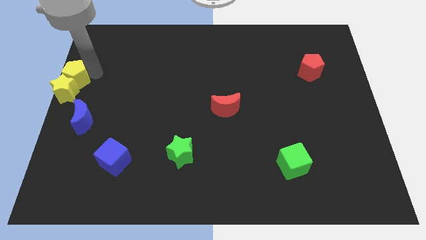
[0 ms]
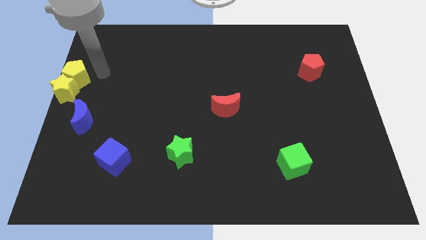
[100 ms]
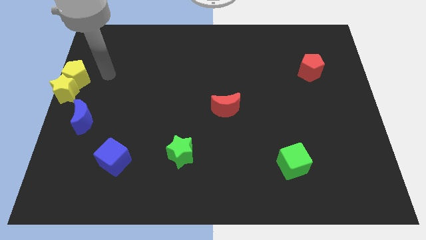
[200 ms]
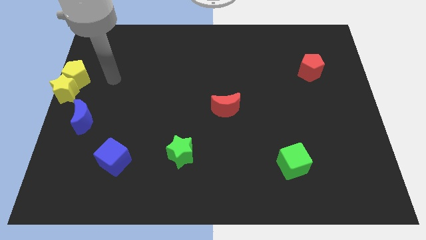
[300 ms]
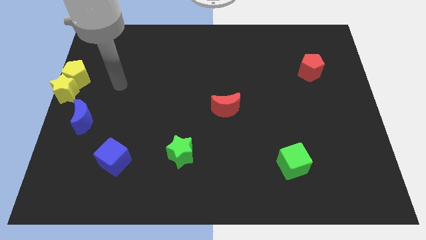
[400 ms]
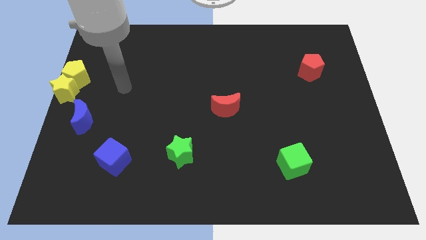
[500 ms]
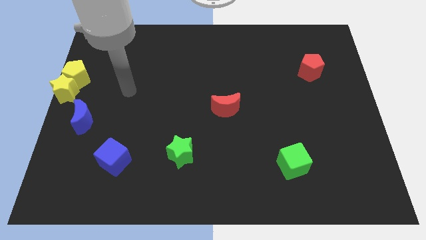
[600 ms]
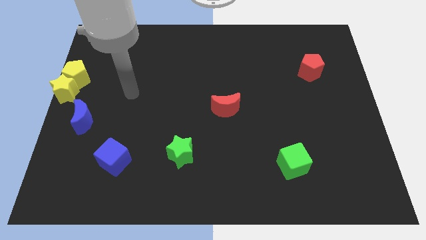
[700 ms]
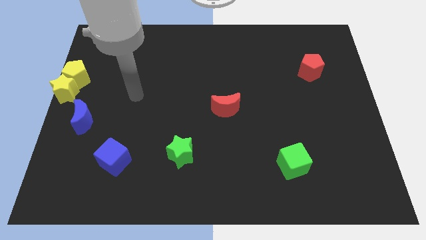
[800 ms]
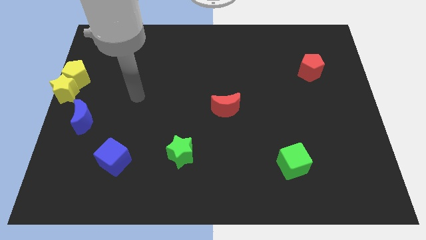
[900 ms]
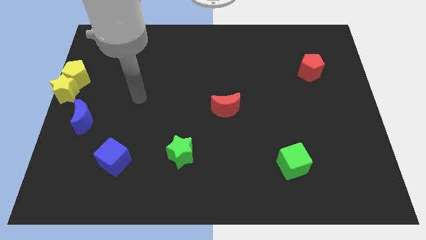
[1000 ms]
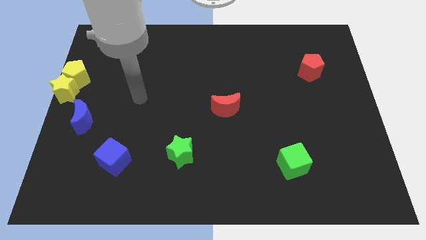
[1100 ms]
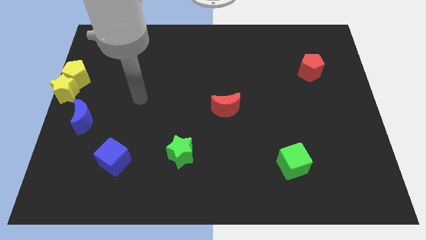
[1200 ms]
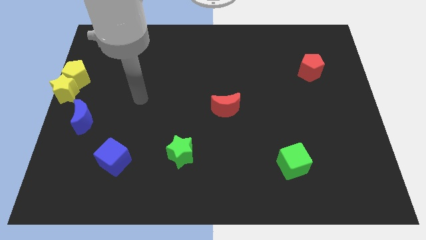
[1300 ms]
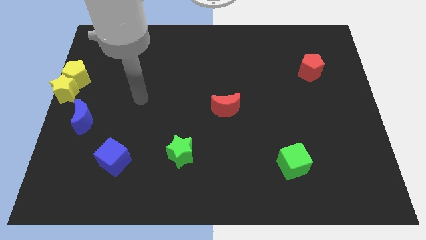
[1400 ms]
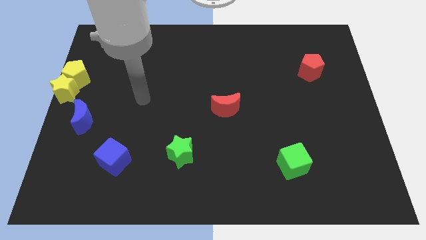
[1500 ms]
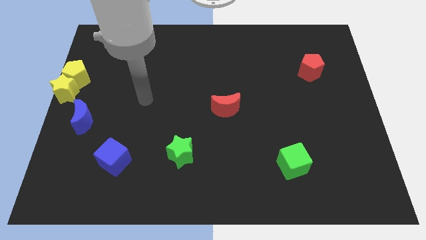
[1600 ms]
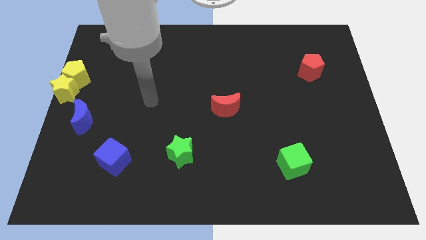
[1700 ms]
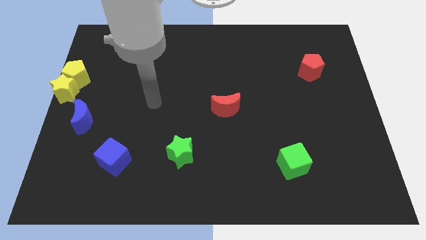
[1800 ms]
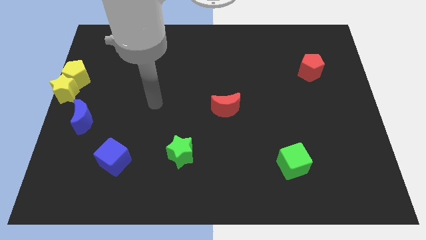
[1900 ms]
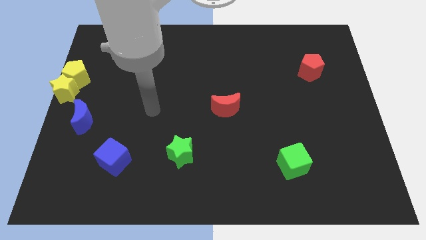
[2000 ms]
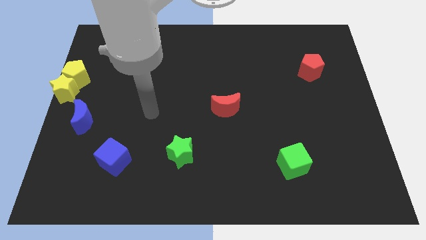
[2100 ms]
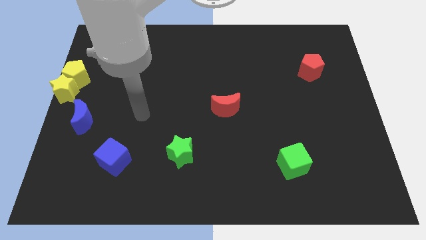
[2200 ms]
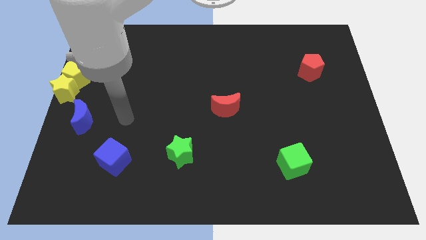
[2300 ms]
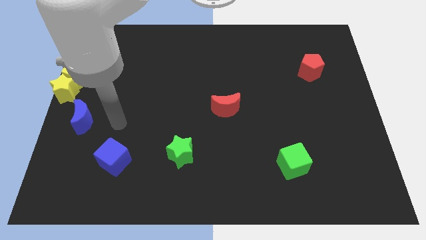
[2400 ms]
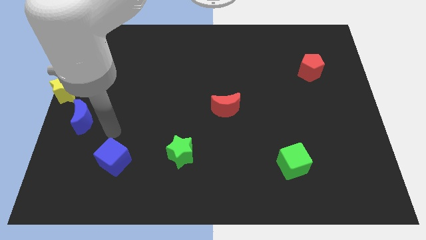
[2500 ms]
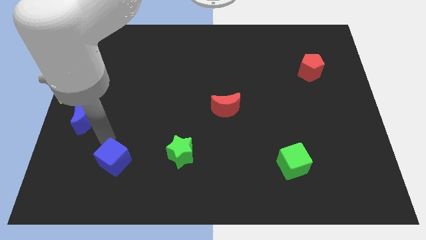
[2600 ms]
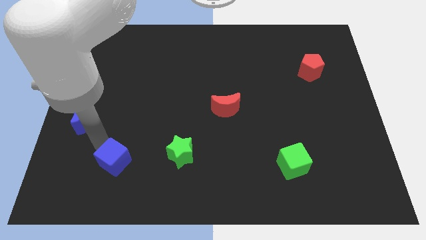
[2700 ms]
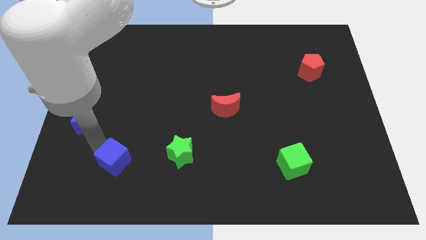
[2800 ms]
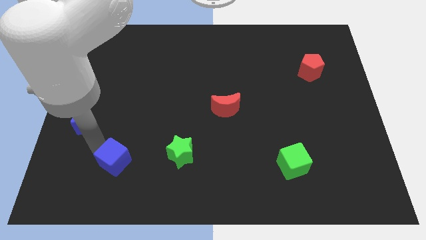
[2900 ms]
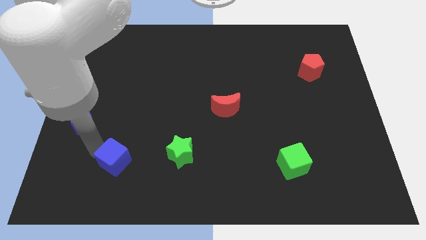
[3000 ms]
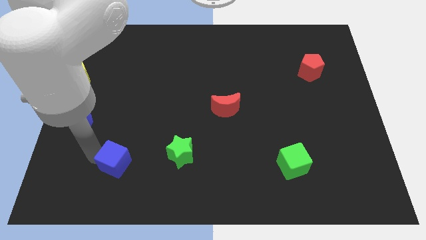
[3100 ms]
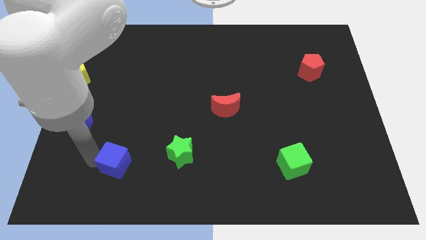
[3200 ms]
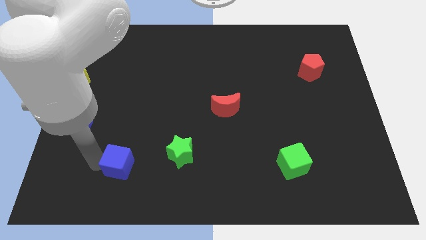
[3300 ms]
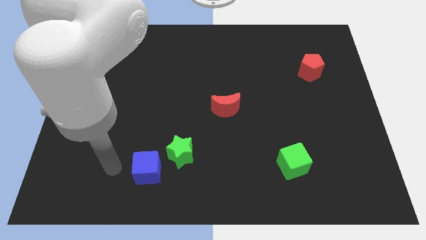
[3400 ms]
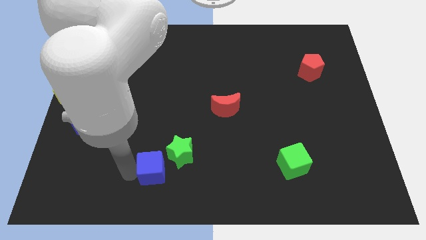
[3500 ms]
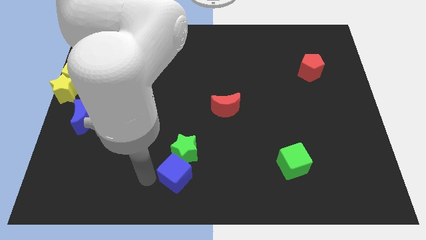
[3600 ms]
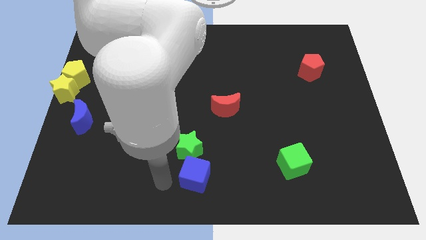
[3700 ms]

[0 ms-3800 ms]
slide the blue cube into the bottom side of the green star

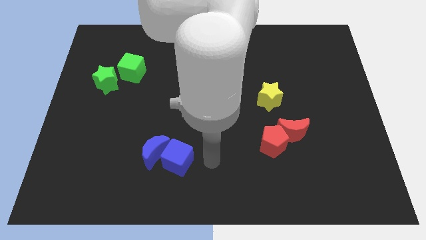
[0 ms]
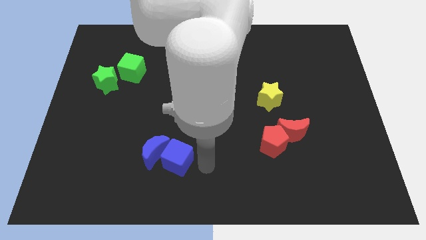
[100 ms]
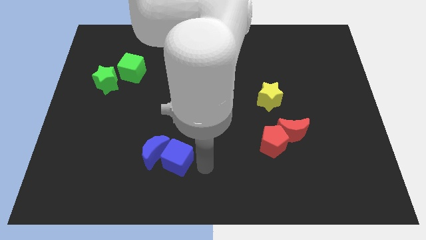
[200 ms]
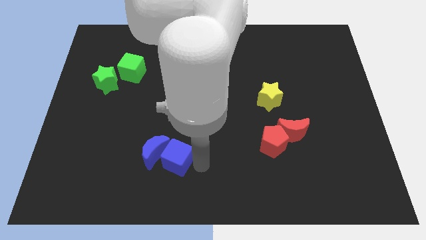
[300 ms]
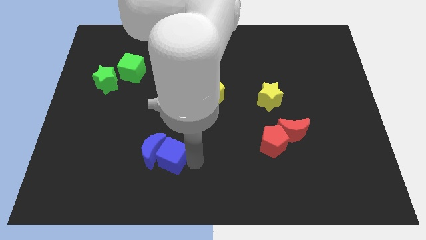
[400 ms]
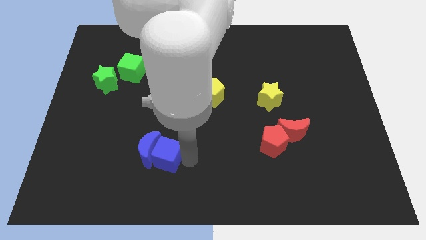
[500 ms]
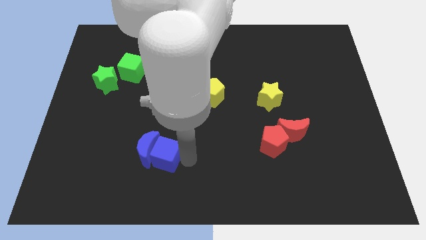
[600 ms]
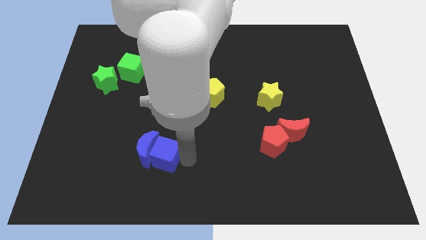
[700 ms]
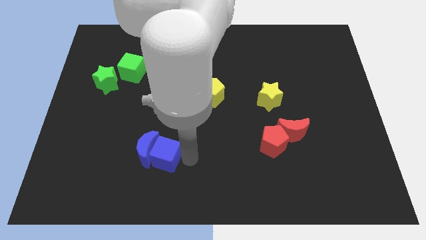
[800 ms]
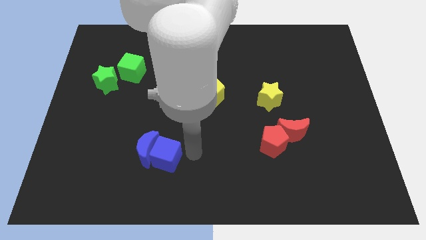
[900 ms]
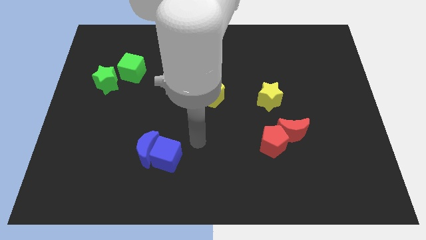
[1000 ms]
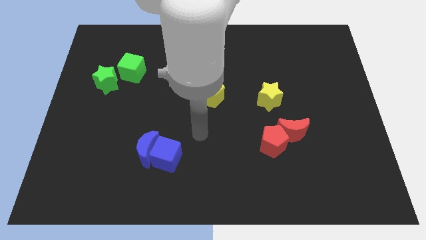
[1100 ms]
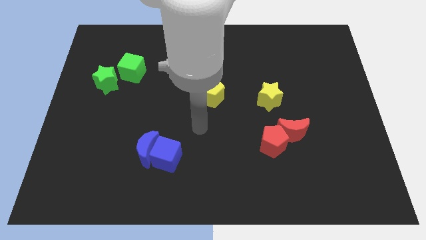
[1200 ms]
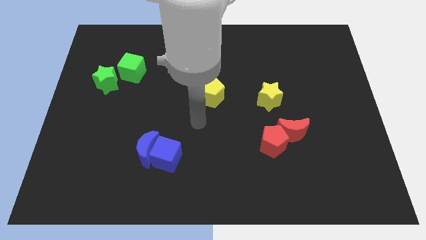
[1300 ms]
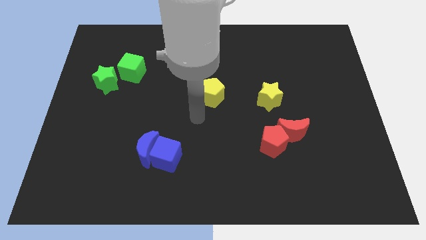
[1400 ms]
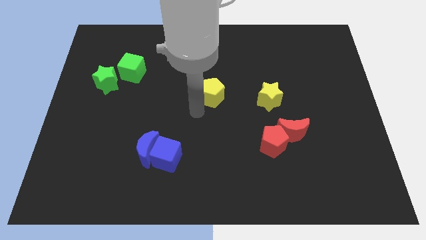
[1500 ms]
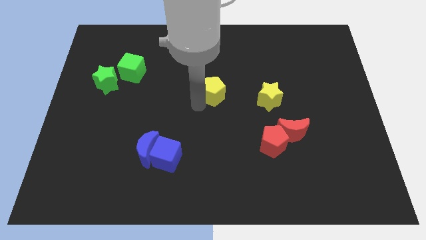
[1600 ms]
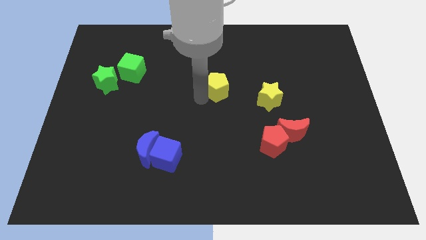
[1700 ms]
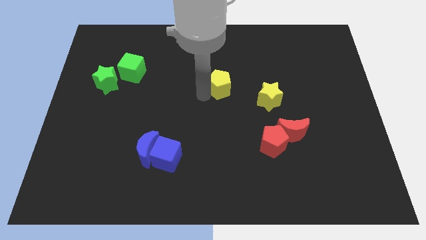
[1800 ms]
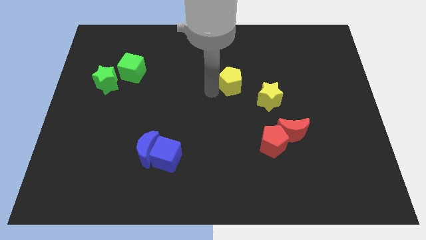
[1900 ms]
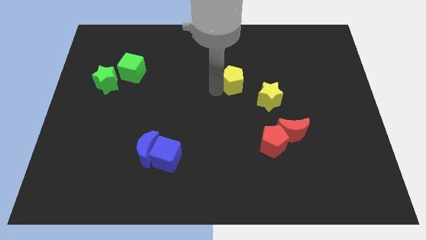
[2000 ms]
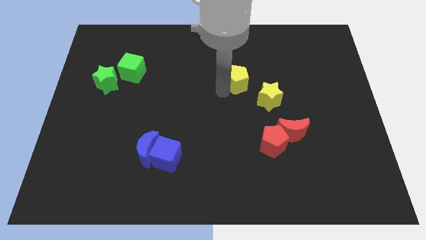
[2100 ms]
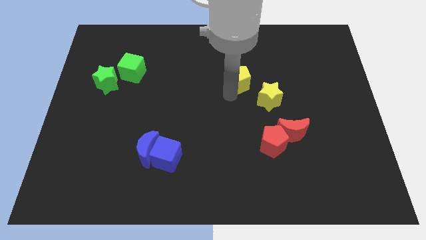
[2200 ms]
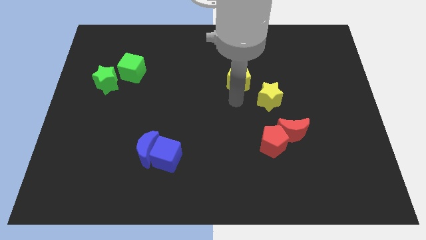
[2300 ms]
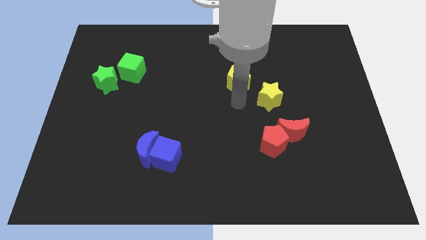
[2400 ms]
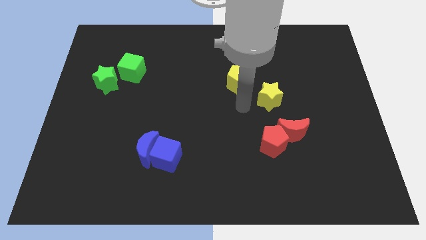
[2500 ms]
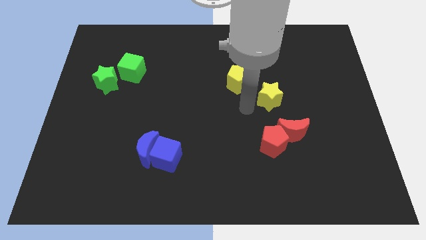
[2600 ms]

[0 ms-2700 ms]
place the yellow pentagon diagonally top left to the yellow star

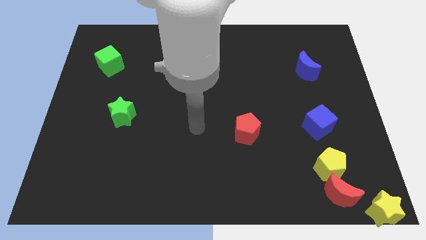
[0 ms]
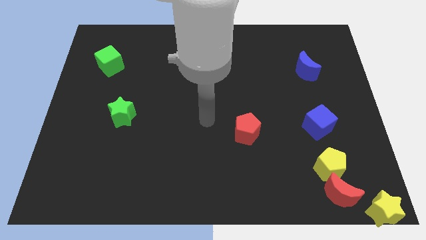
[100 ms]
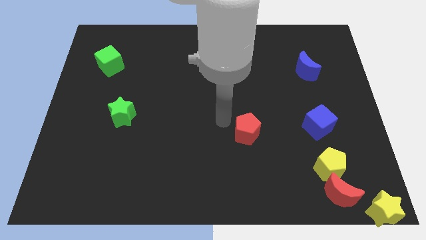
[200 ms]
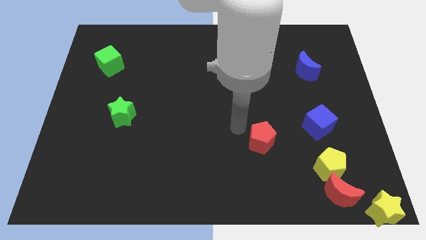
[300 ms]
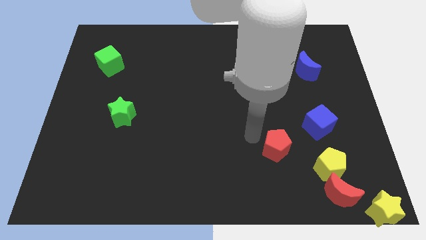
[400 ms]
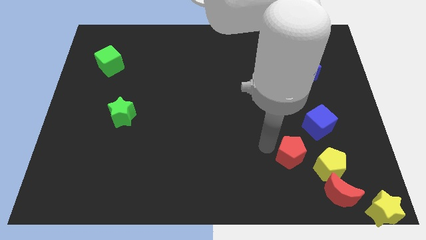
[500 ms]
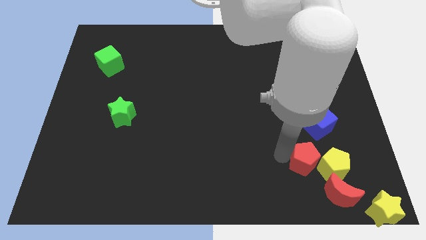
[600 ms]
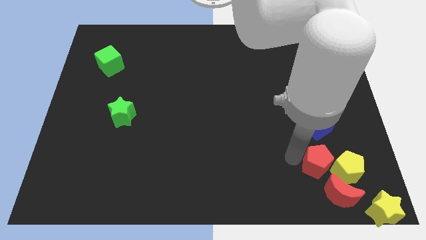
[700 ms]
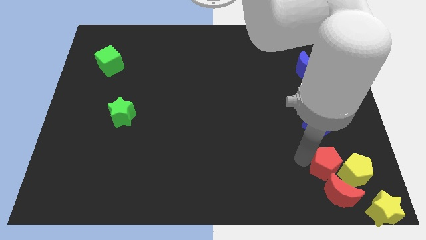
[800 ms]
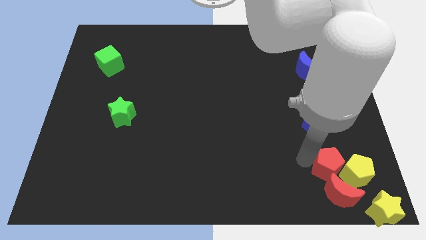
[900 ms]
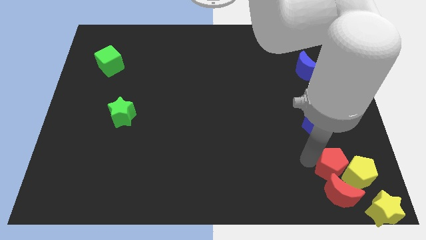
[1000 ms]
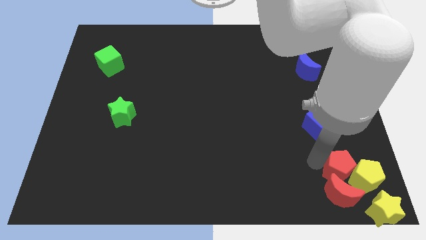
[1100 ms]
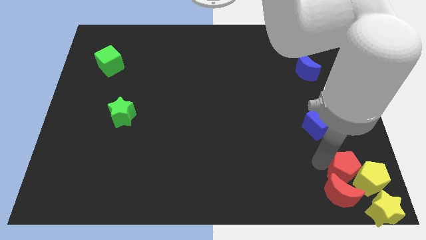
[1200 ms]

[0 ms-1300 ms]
push the red pentagon into the yellow pentagon

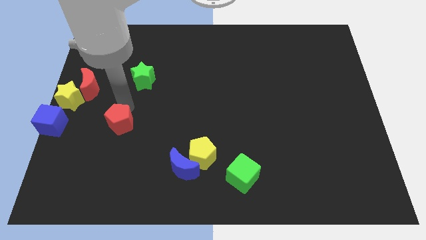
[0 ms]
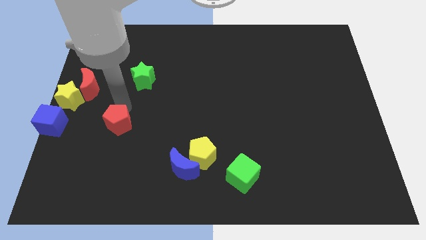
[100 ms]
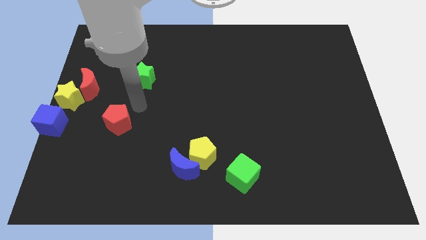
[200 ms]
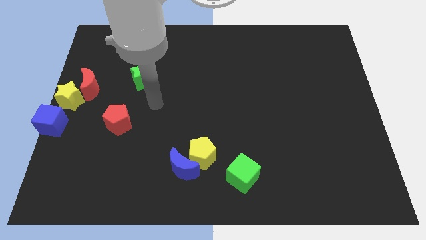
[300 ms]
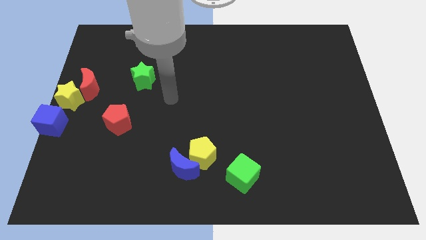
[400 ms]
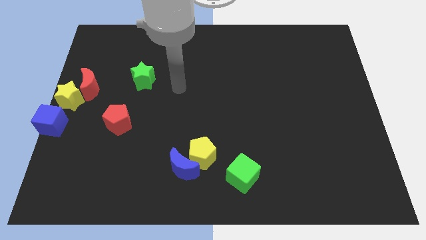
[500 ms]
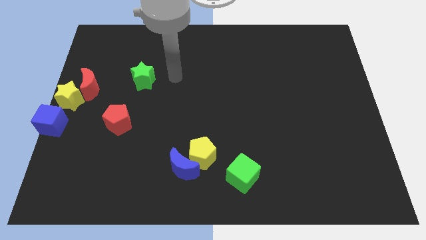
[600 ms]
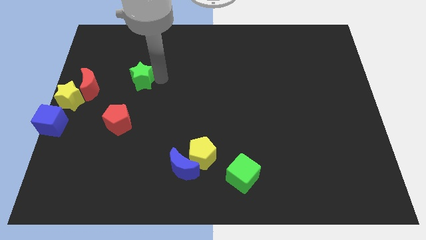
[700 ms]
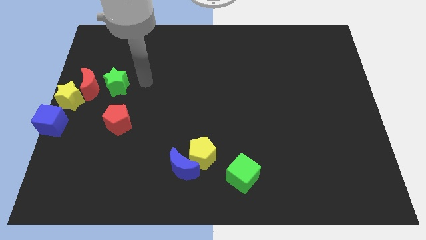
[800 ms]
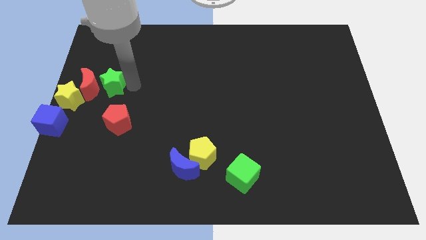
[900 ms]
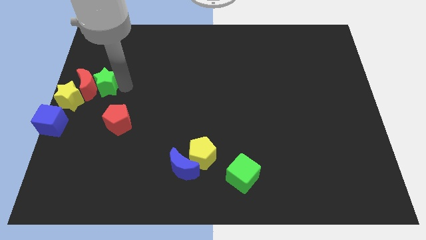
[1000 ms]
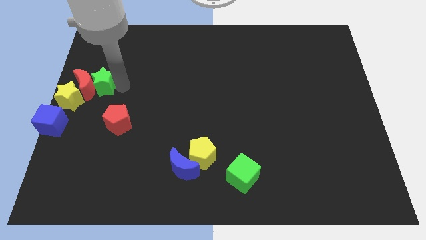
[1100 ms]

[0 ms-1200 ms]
slide the green star into the right side of the red crescent
